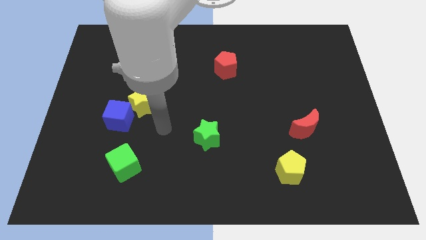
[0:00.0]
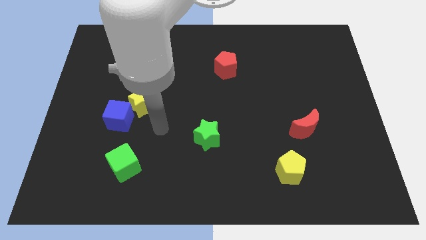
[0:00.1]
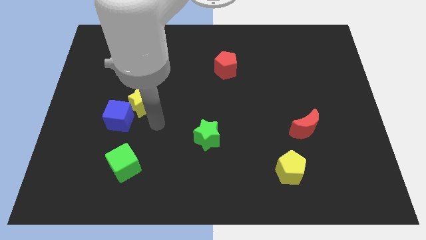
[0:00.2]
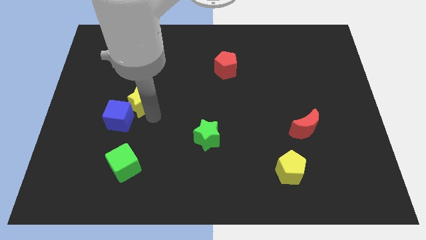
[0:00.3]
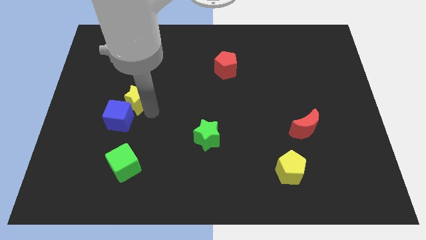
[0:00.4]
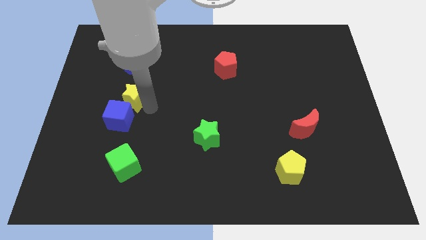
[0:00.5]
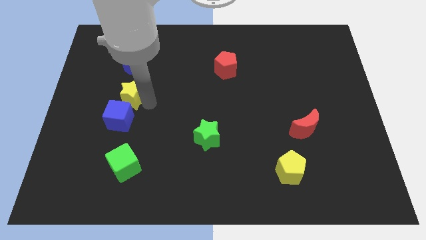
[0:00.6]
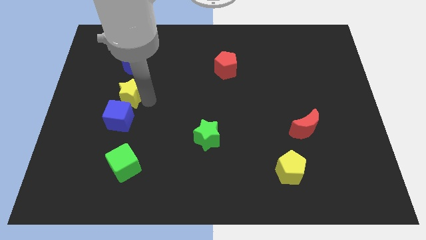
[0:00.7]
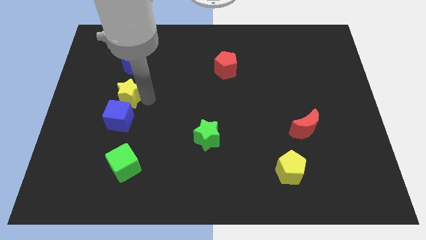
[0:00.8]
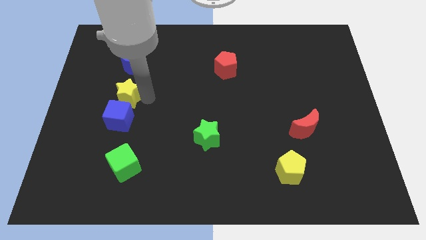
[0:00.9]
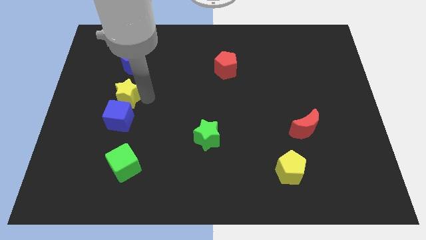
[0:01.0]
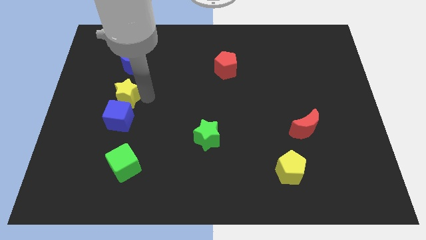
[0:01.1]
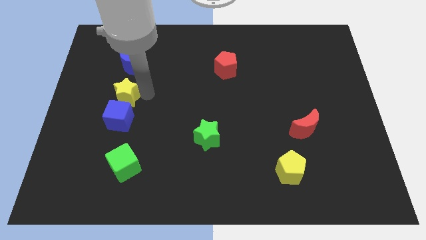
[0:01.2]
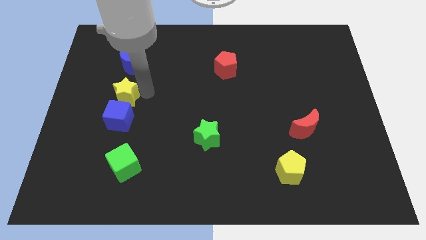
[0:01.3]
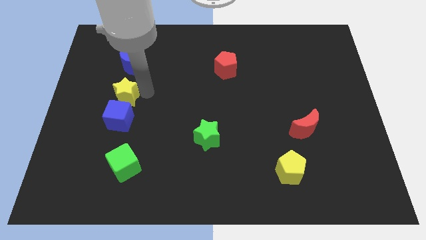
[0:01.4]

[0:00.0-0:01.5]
move the yellow star above the blue cube

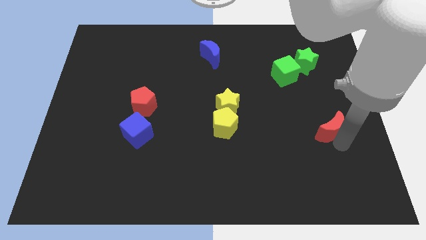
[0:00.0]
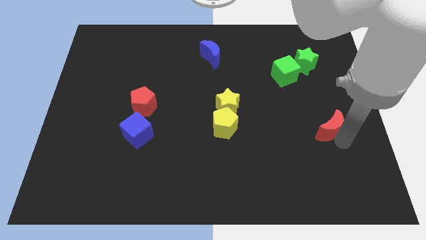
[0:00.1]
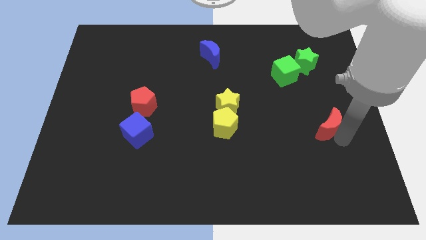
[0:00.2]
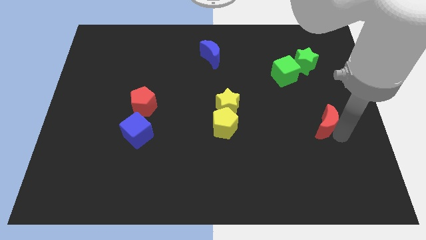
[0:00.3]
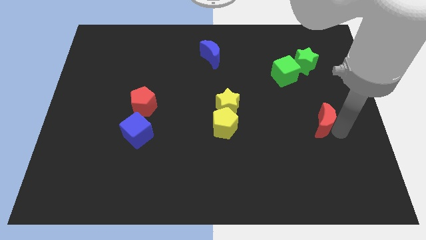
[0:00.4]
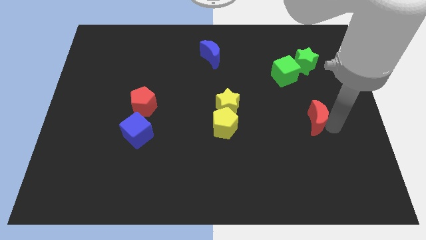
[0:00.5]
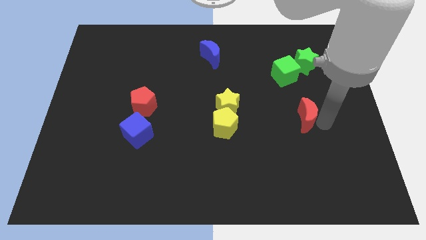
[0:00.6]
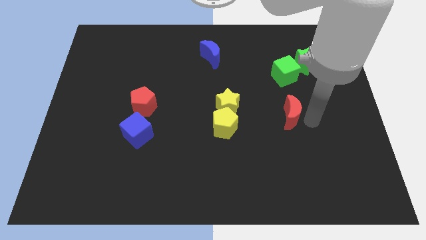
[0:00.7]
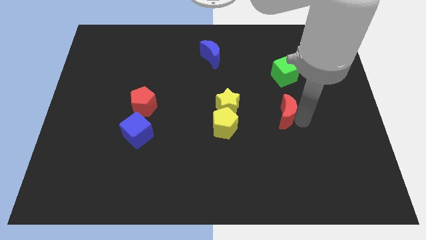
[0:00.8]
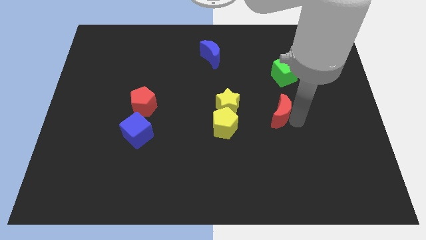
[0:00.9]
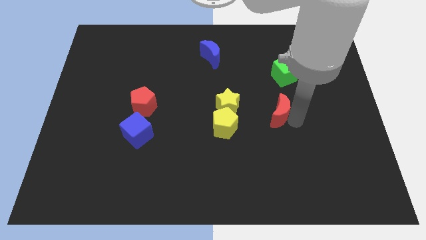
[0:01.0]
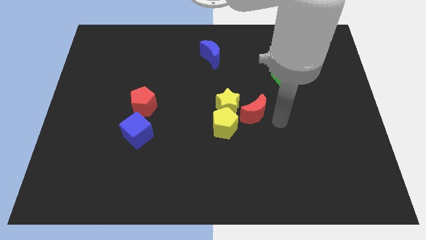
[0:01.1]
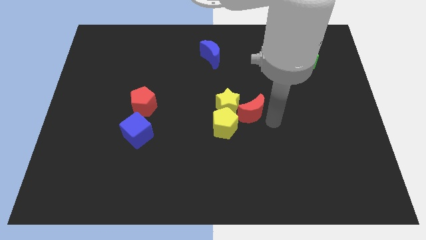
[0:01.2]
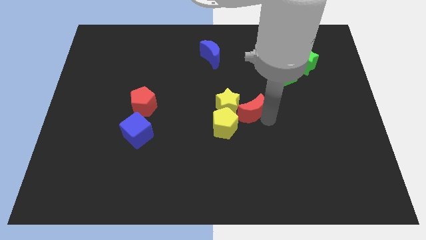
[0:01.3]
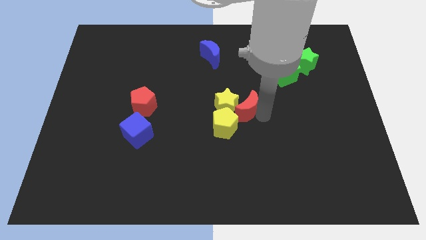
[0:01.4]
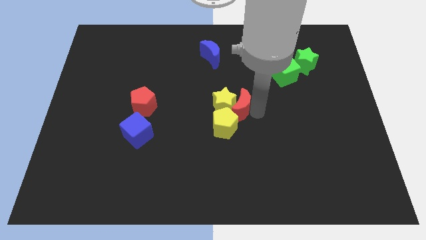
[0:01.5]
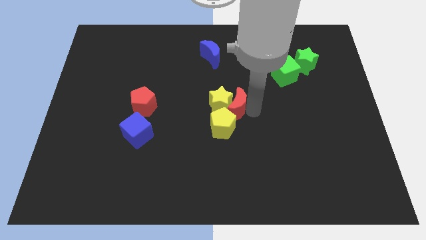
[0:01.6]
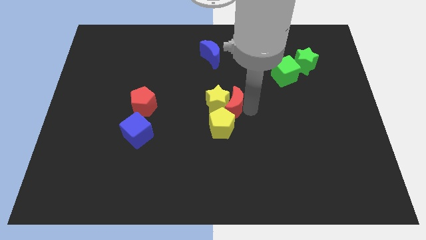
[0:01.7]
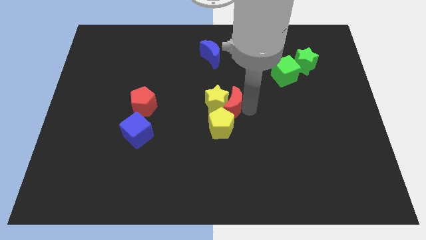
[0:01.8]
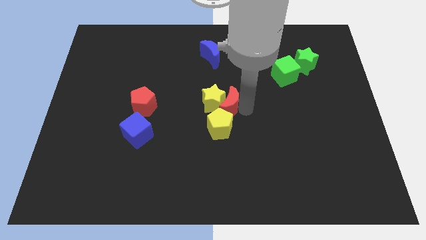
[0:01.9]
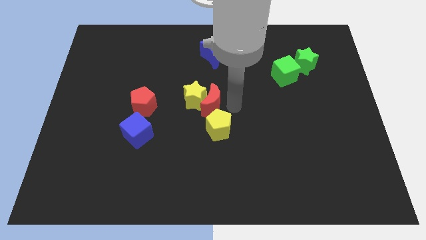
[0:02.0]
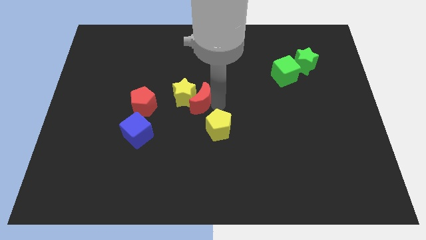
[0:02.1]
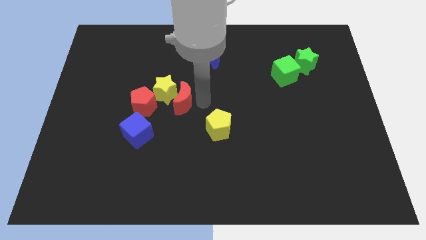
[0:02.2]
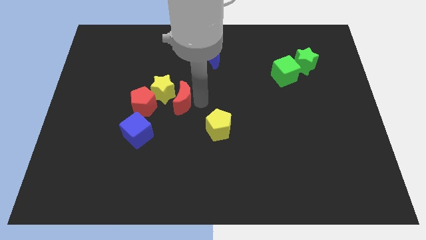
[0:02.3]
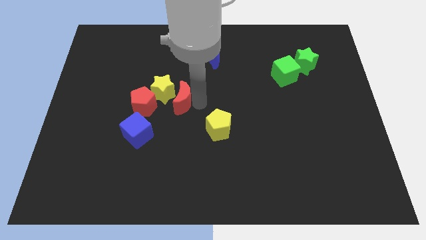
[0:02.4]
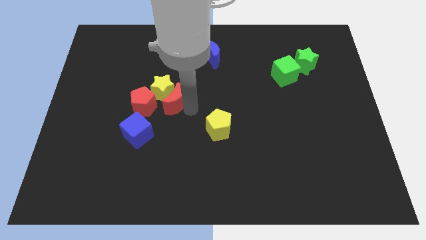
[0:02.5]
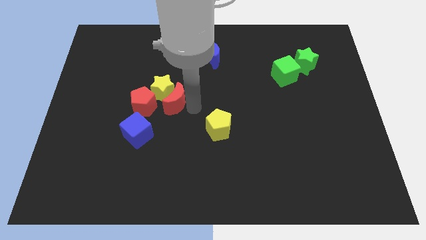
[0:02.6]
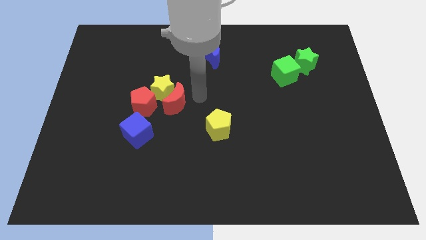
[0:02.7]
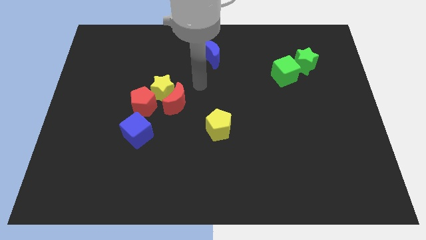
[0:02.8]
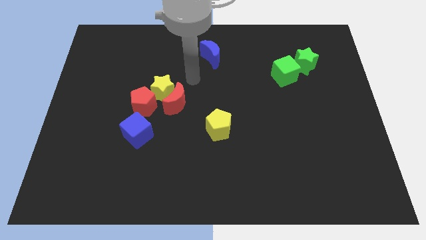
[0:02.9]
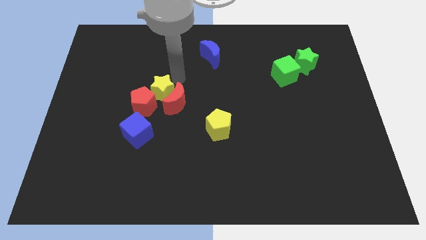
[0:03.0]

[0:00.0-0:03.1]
push the red crescent into the yellow star

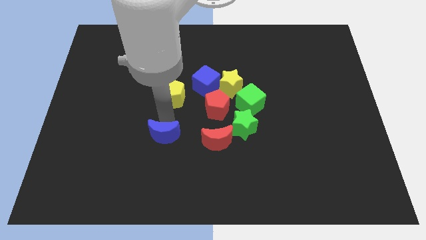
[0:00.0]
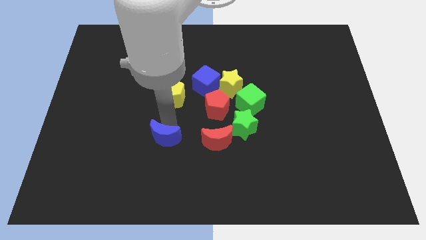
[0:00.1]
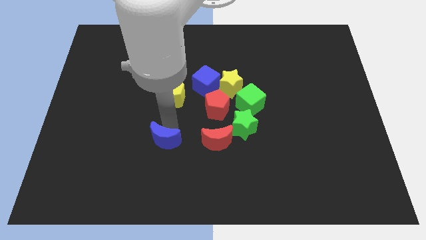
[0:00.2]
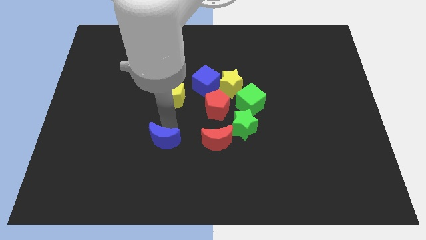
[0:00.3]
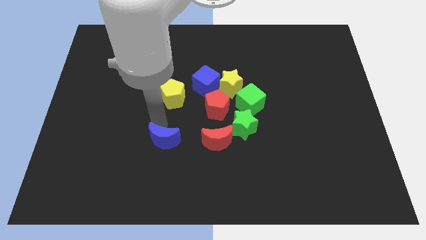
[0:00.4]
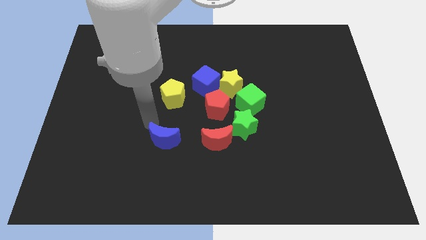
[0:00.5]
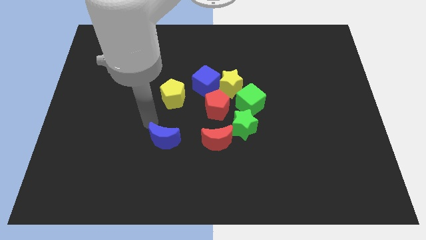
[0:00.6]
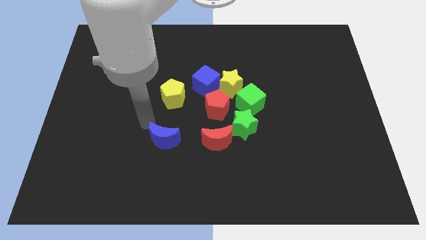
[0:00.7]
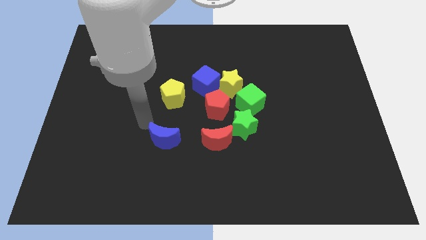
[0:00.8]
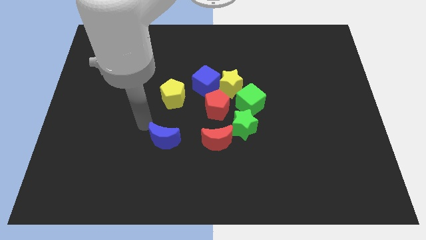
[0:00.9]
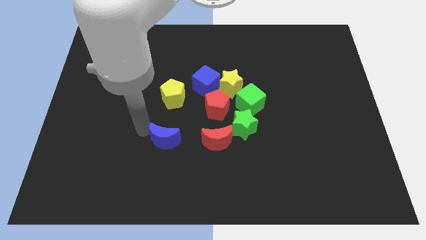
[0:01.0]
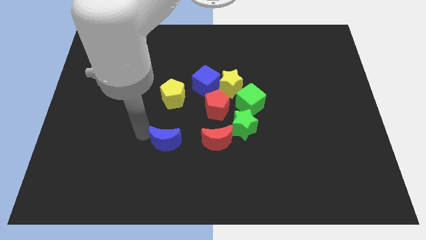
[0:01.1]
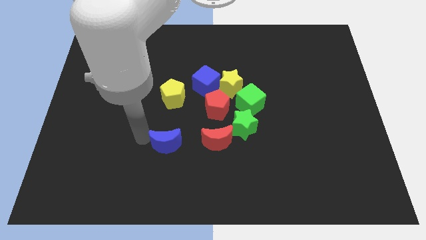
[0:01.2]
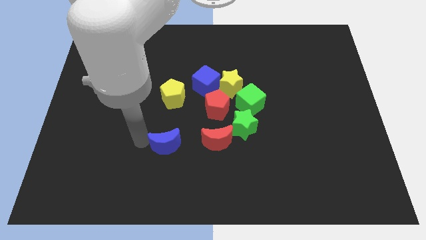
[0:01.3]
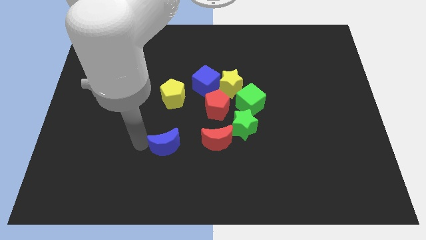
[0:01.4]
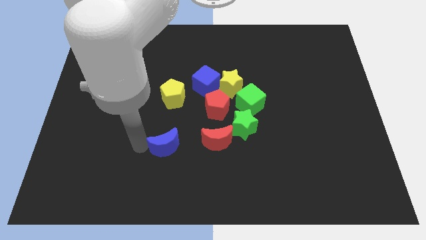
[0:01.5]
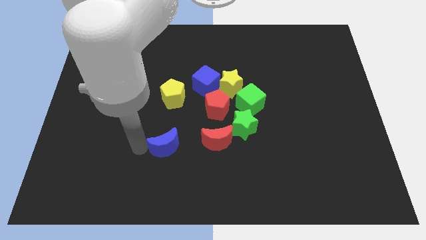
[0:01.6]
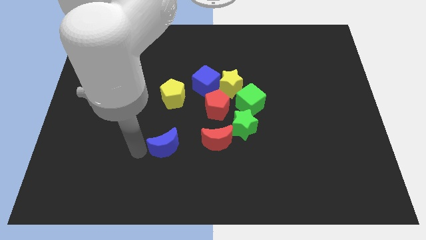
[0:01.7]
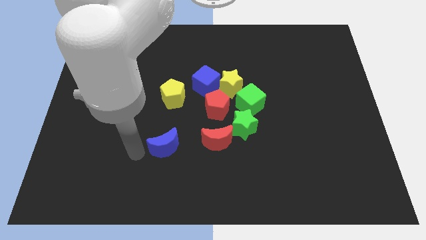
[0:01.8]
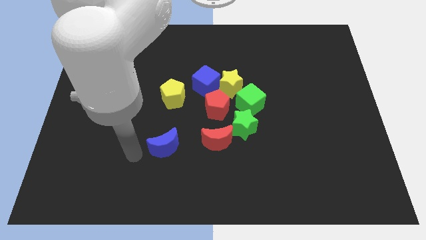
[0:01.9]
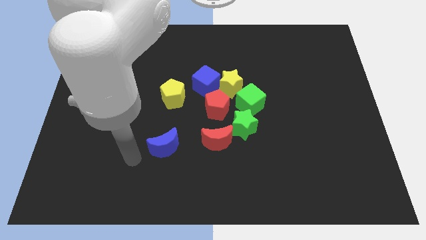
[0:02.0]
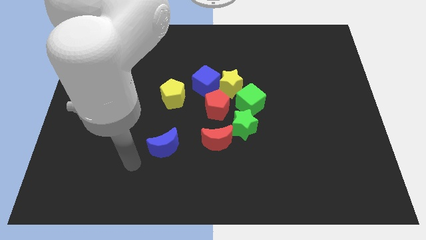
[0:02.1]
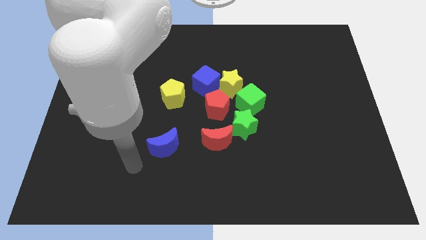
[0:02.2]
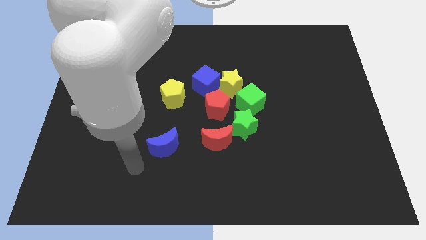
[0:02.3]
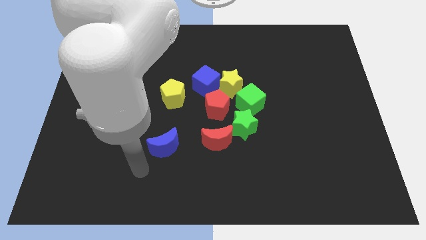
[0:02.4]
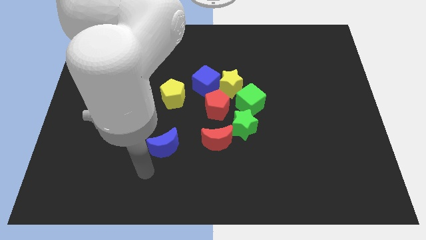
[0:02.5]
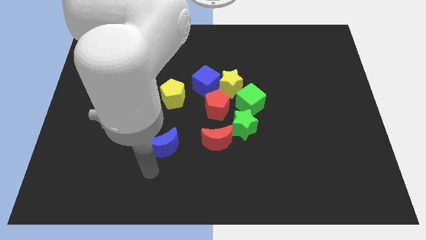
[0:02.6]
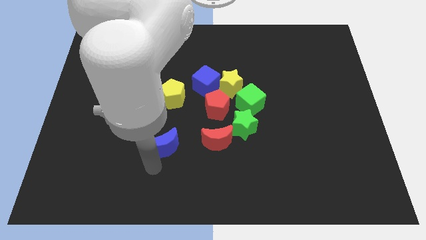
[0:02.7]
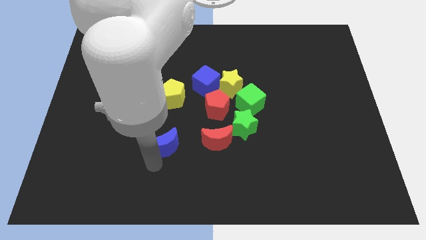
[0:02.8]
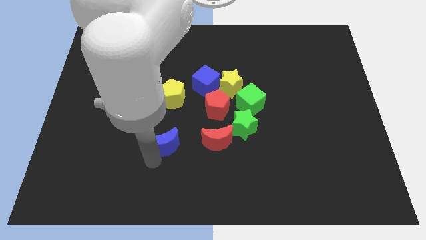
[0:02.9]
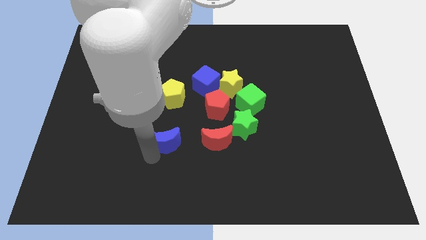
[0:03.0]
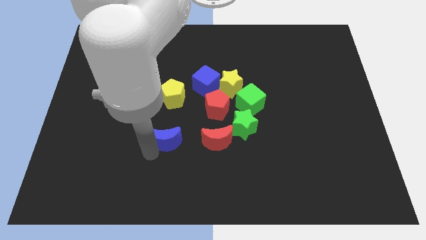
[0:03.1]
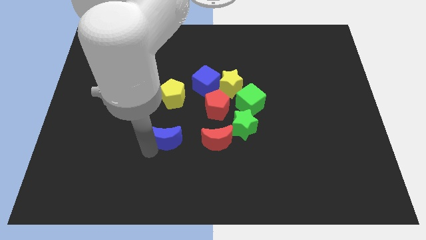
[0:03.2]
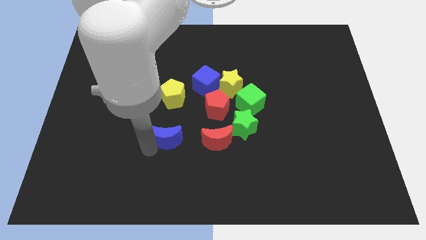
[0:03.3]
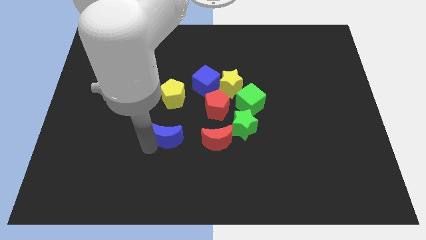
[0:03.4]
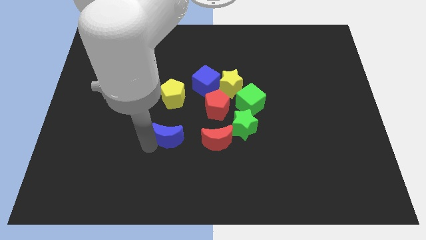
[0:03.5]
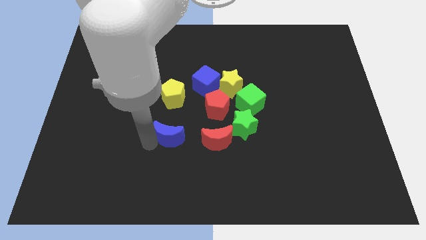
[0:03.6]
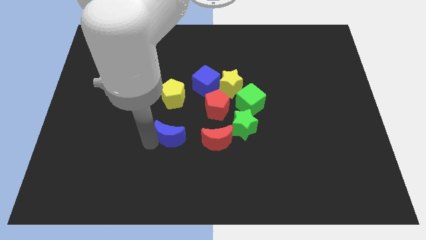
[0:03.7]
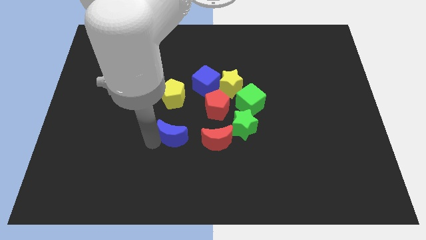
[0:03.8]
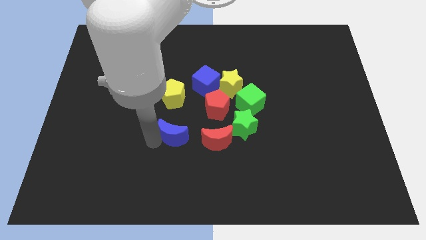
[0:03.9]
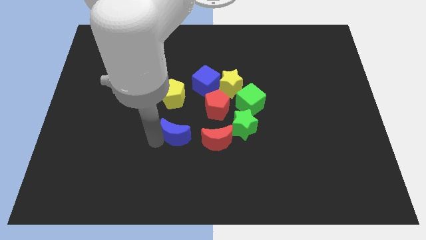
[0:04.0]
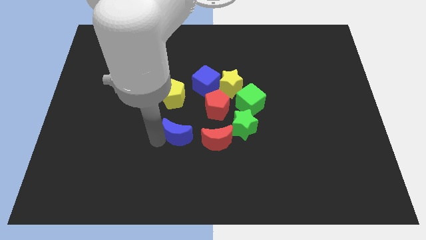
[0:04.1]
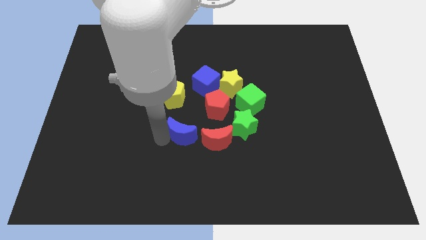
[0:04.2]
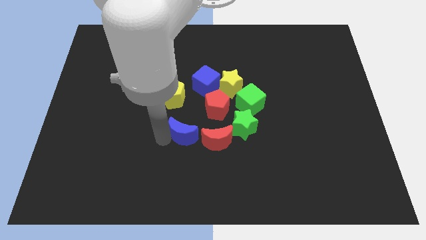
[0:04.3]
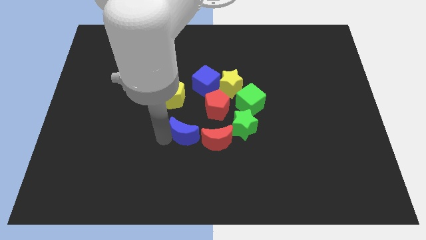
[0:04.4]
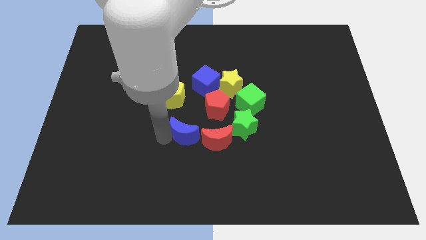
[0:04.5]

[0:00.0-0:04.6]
move blue crescent to left of red crescent
